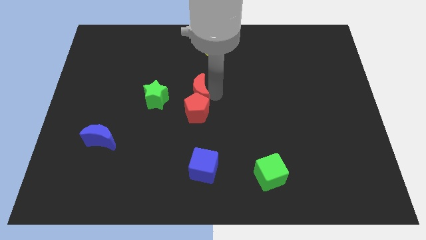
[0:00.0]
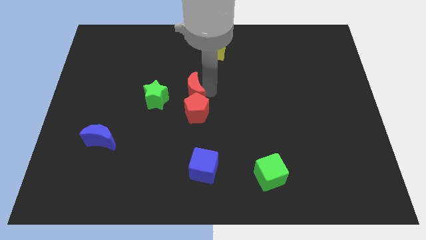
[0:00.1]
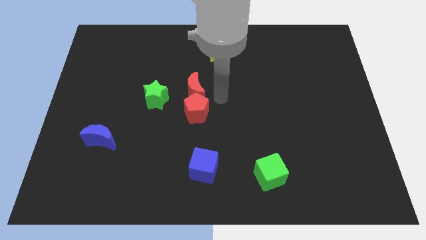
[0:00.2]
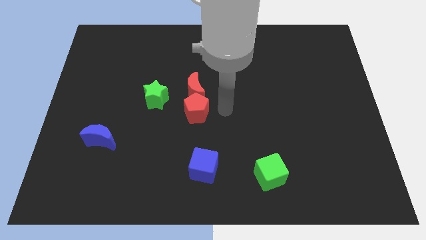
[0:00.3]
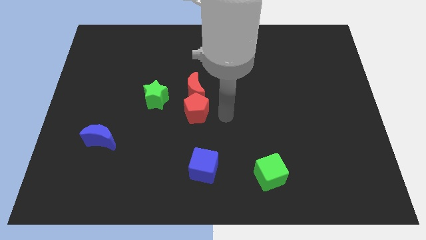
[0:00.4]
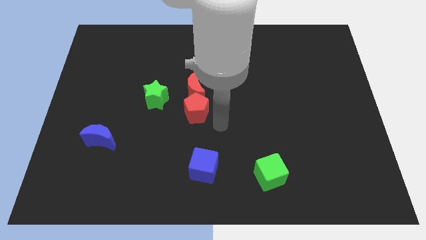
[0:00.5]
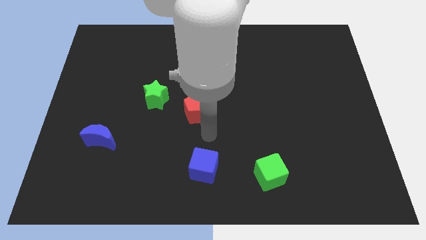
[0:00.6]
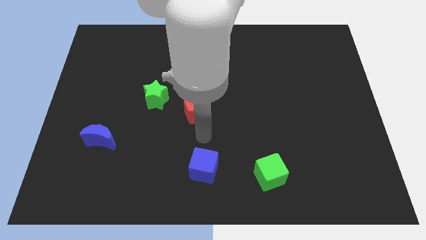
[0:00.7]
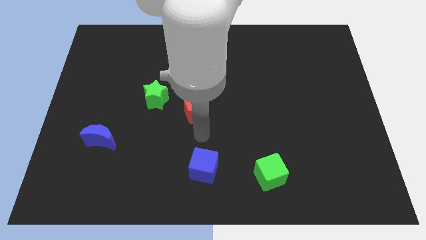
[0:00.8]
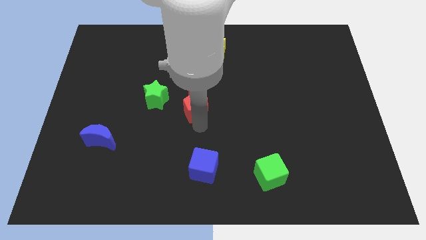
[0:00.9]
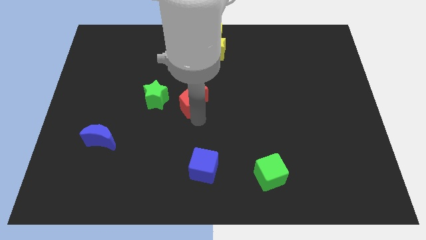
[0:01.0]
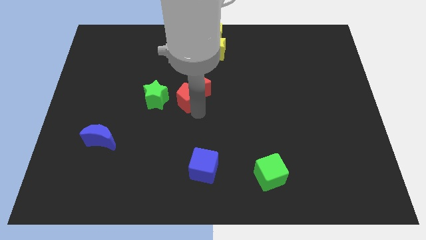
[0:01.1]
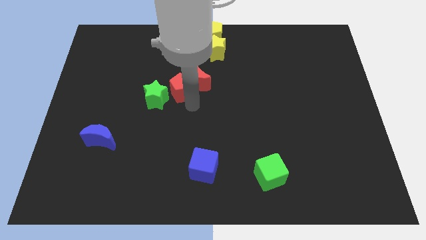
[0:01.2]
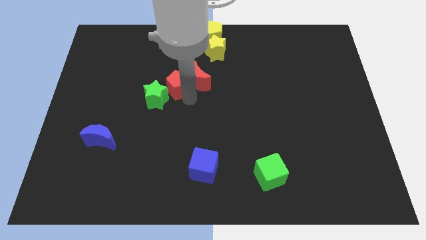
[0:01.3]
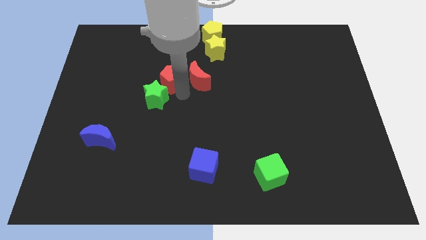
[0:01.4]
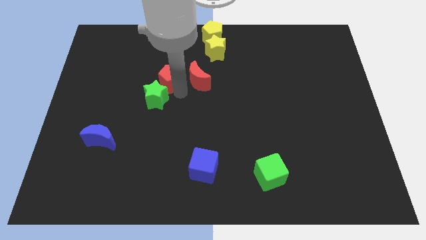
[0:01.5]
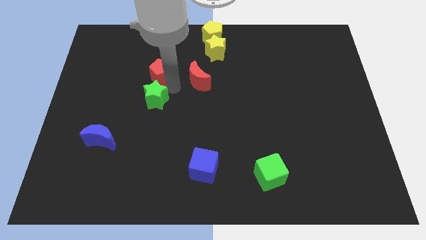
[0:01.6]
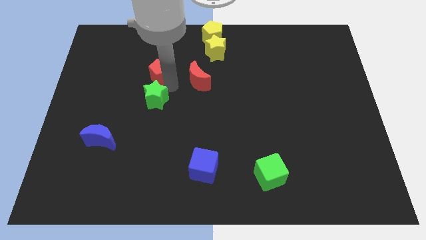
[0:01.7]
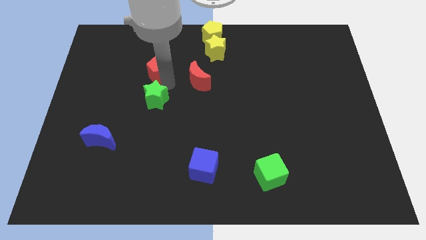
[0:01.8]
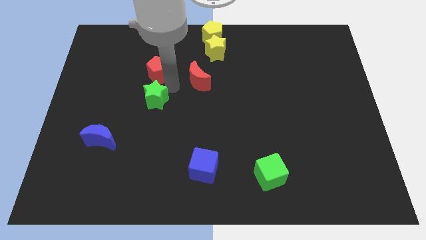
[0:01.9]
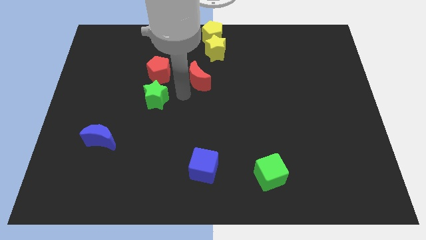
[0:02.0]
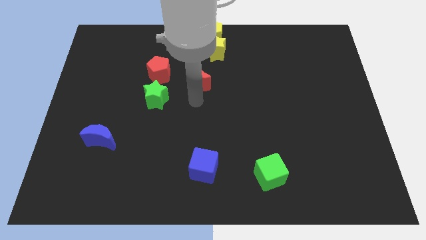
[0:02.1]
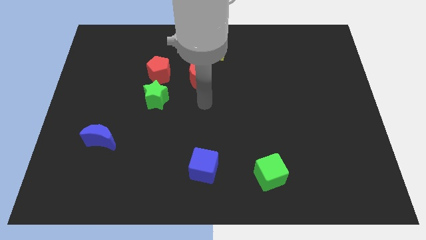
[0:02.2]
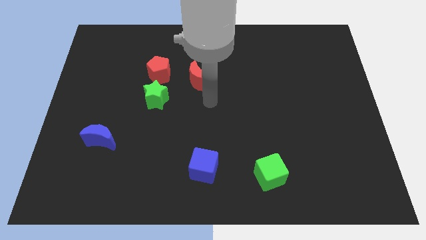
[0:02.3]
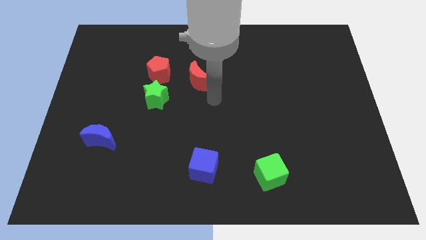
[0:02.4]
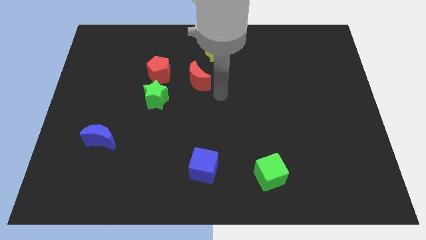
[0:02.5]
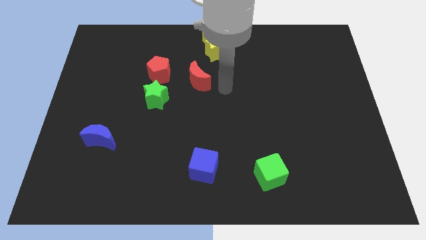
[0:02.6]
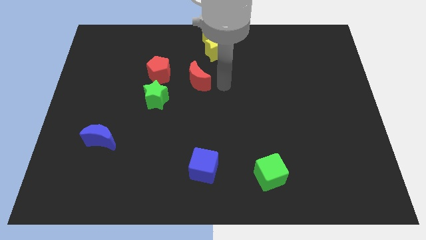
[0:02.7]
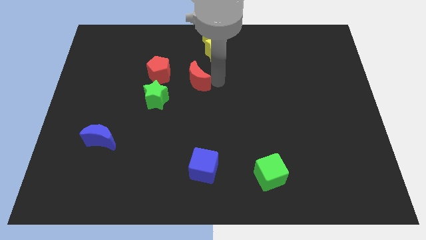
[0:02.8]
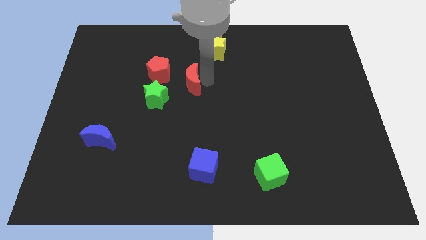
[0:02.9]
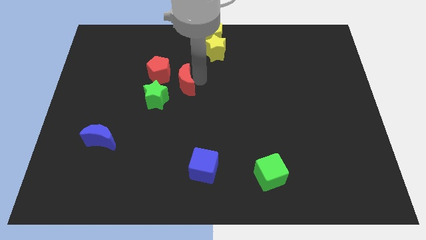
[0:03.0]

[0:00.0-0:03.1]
put the red pentagon above the green star

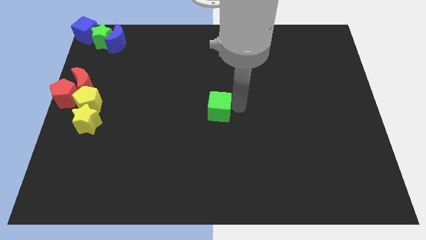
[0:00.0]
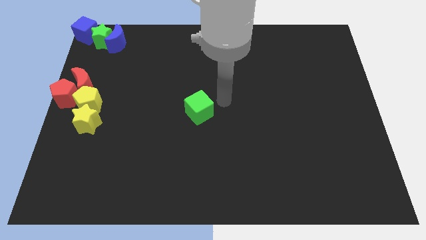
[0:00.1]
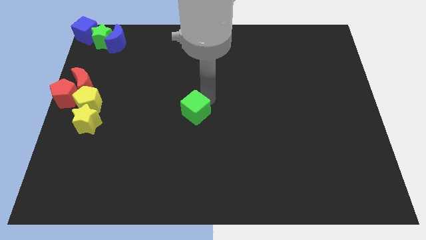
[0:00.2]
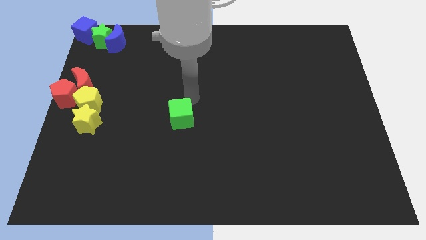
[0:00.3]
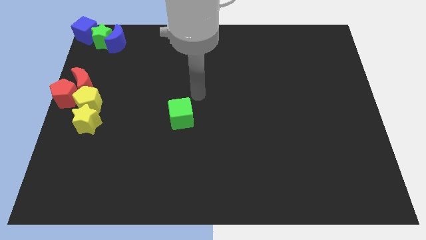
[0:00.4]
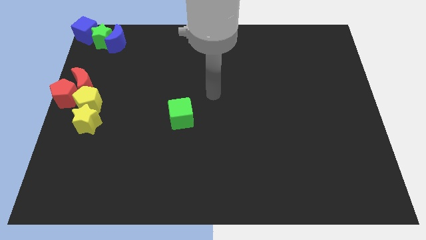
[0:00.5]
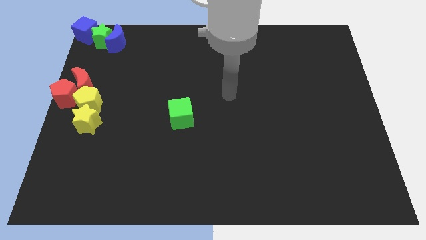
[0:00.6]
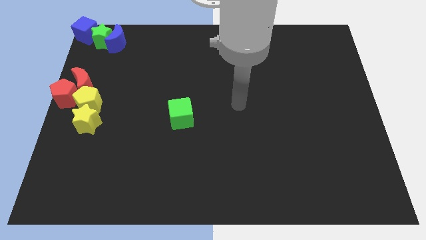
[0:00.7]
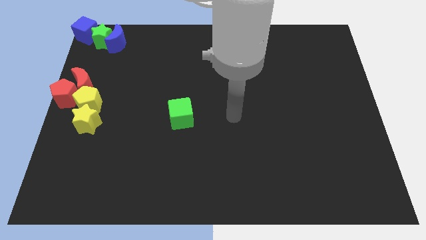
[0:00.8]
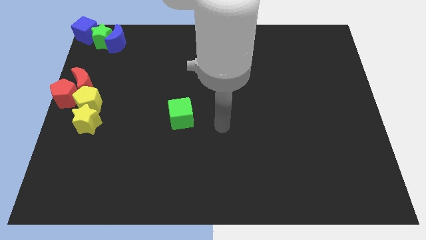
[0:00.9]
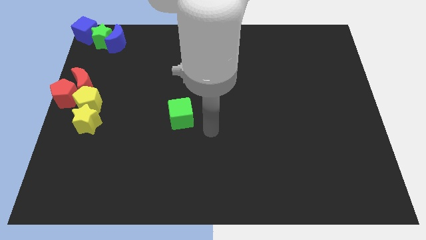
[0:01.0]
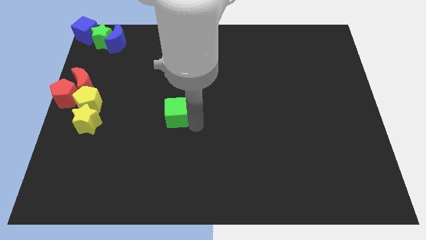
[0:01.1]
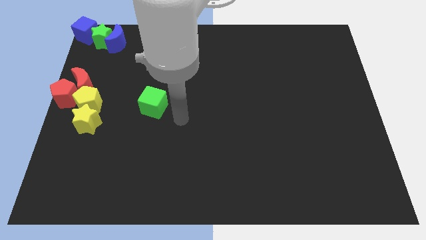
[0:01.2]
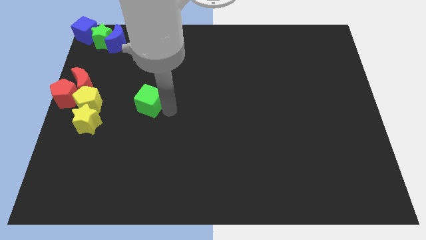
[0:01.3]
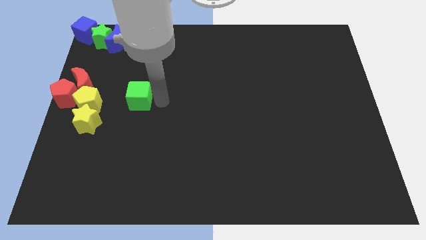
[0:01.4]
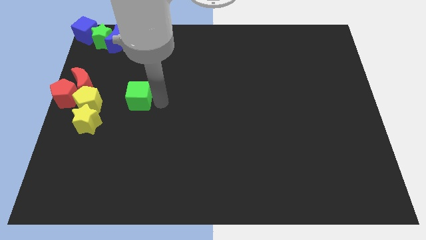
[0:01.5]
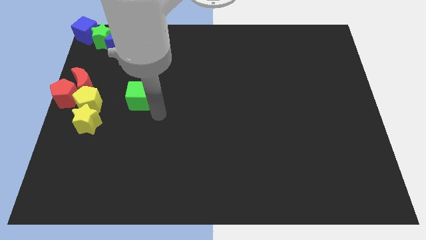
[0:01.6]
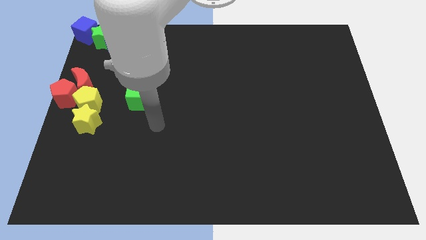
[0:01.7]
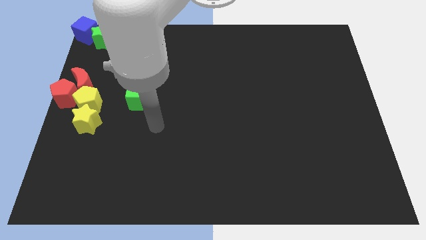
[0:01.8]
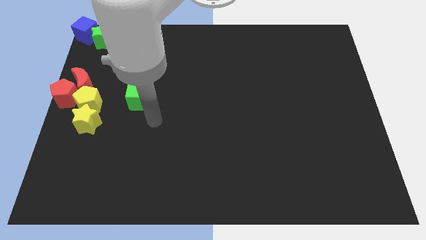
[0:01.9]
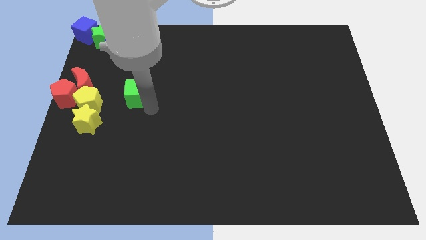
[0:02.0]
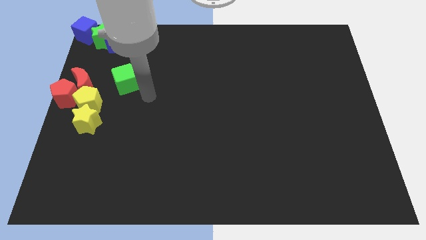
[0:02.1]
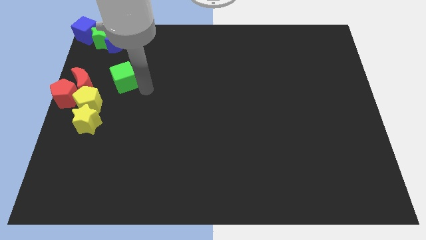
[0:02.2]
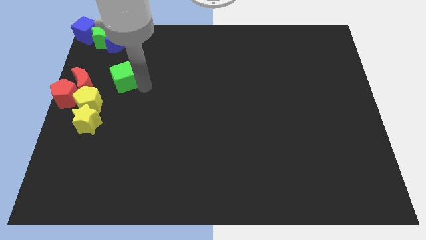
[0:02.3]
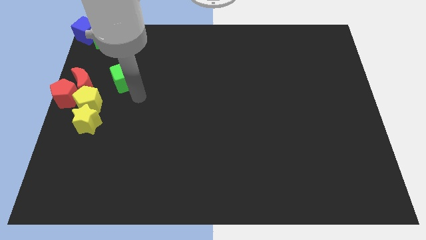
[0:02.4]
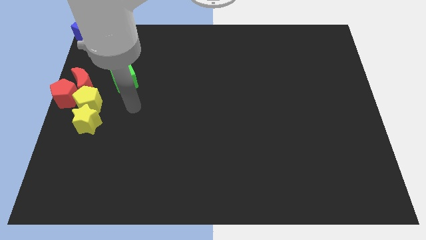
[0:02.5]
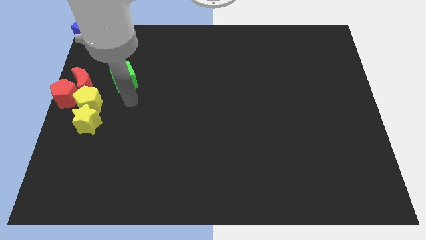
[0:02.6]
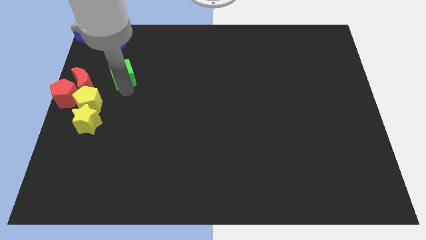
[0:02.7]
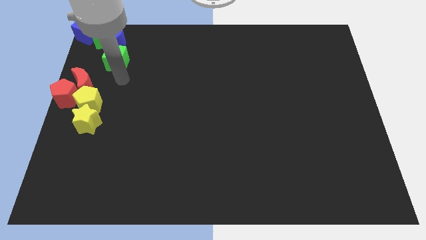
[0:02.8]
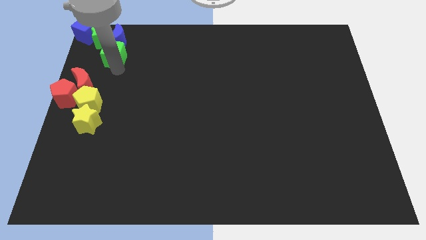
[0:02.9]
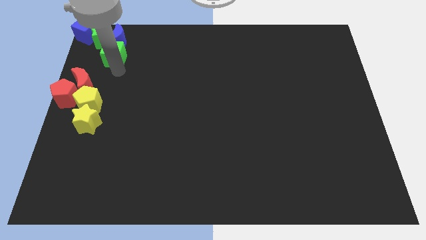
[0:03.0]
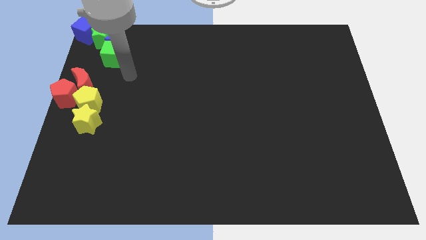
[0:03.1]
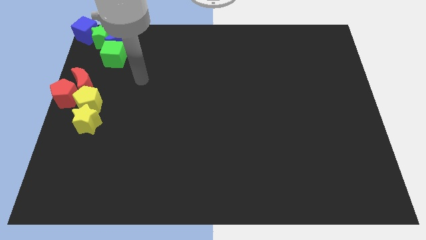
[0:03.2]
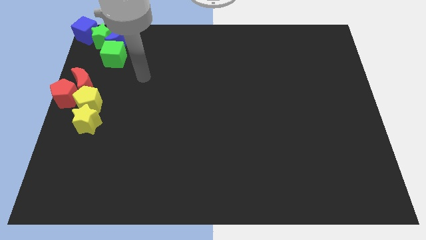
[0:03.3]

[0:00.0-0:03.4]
move the green cube to the bottom of the blue moon

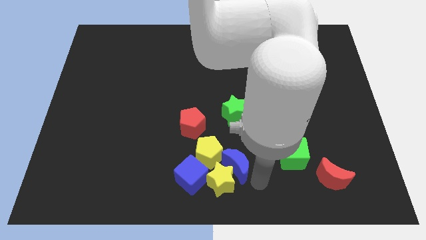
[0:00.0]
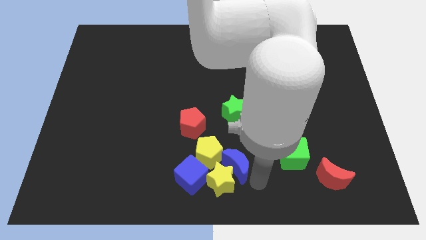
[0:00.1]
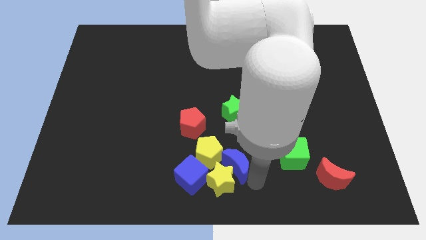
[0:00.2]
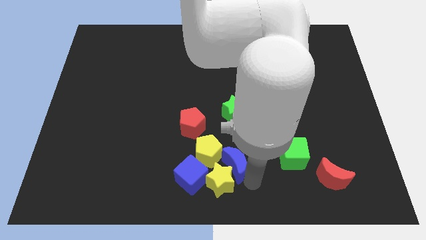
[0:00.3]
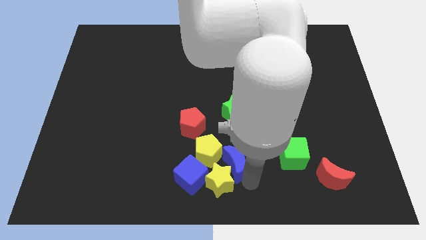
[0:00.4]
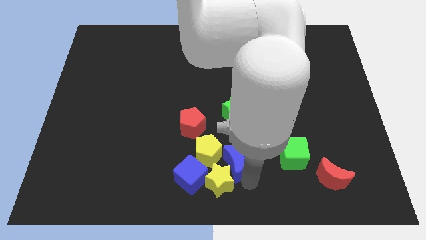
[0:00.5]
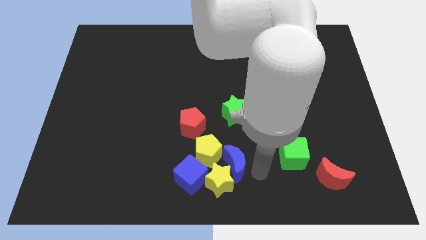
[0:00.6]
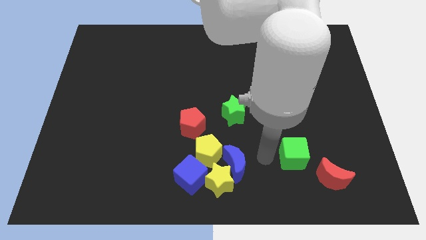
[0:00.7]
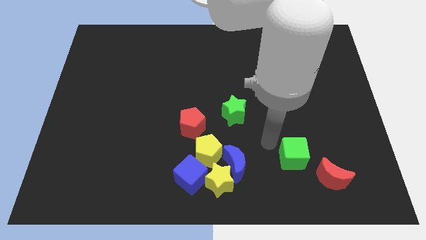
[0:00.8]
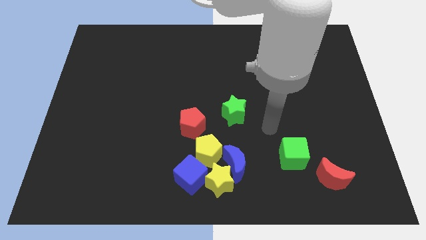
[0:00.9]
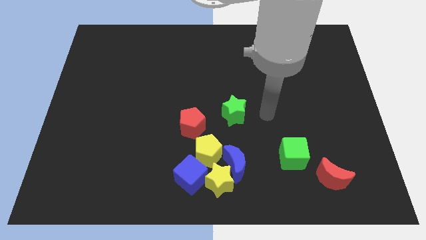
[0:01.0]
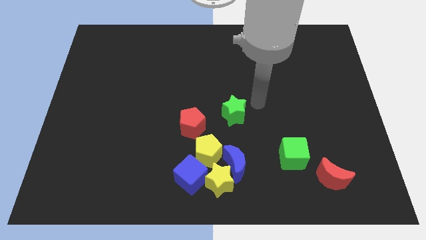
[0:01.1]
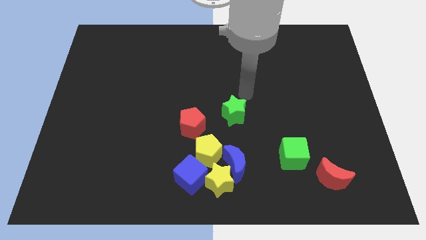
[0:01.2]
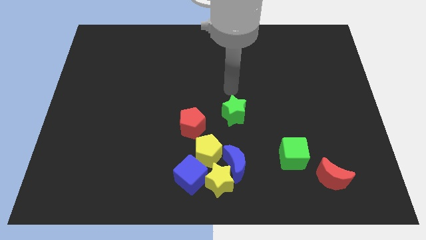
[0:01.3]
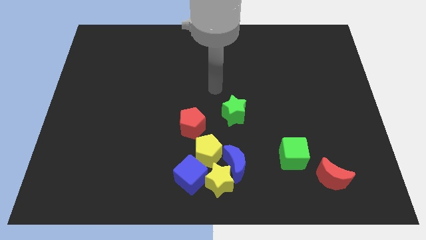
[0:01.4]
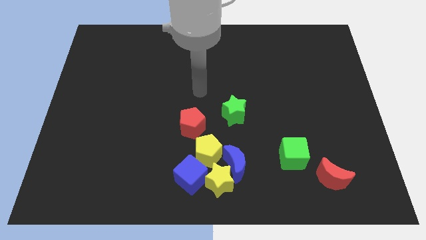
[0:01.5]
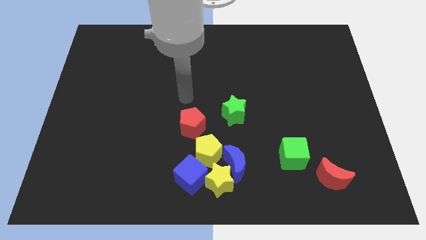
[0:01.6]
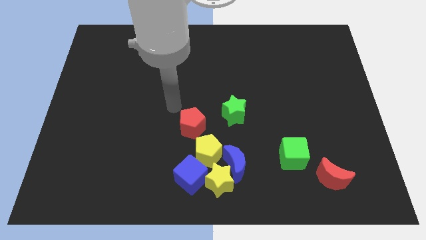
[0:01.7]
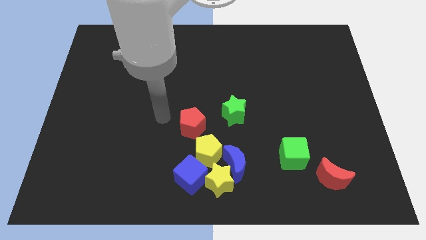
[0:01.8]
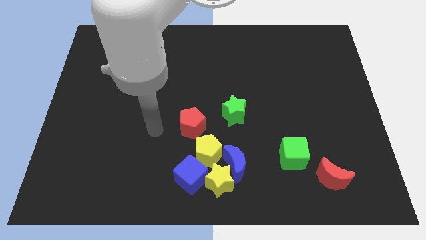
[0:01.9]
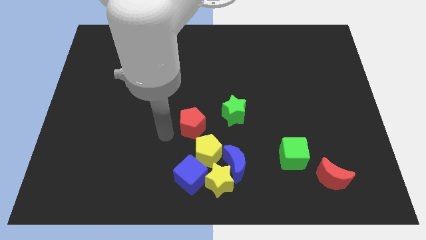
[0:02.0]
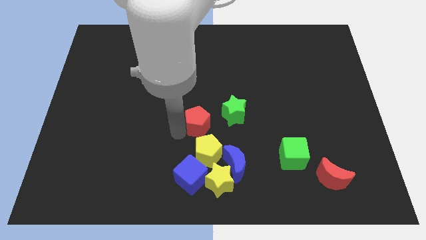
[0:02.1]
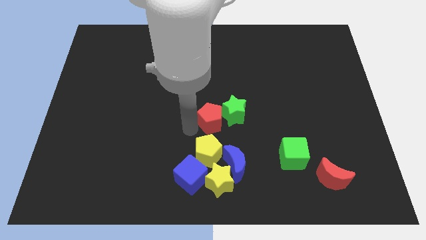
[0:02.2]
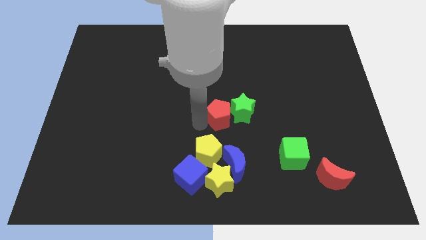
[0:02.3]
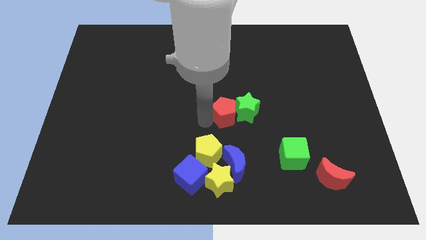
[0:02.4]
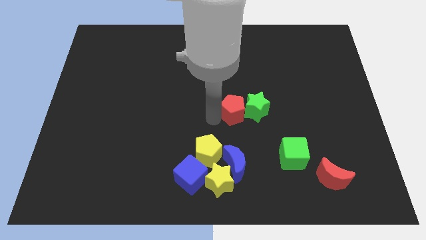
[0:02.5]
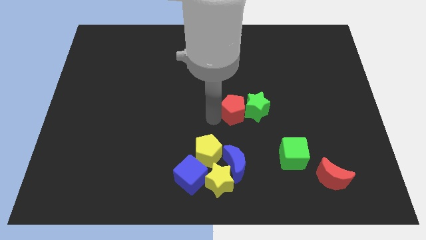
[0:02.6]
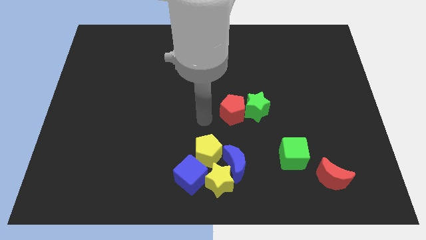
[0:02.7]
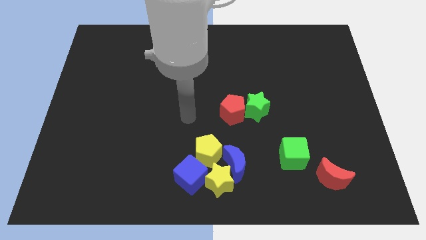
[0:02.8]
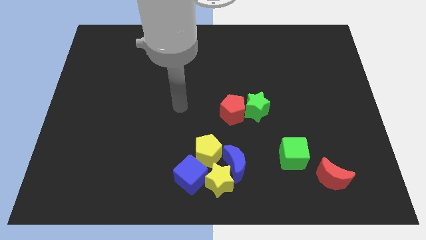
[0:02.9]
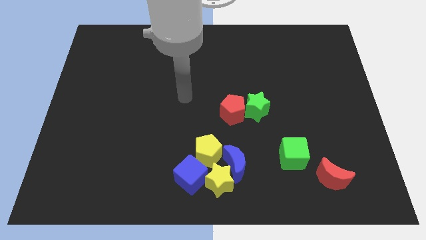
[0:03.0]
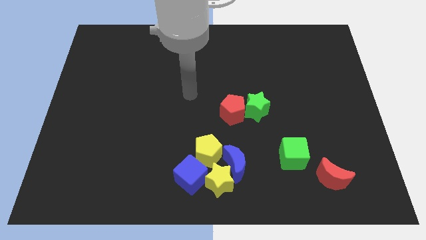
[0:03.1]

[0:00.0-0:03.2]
push the red pentagon into the green star
